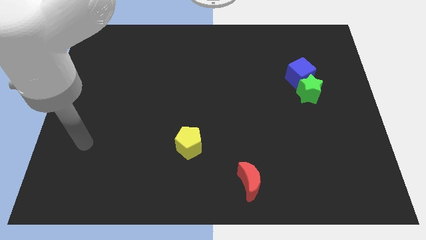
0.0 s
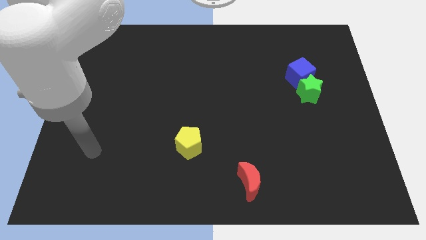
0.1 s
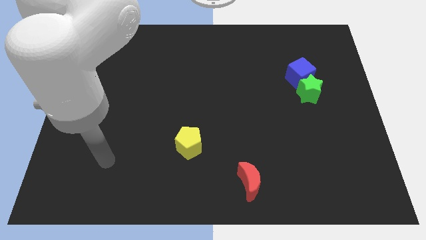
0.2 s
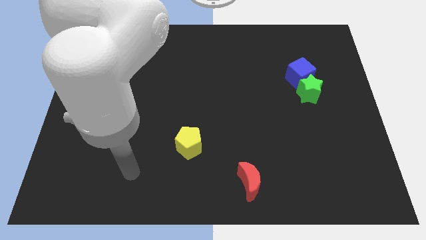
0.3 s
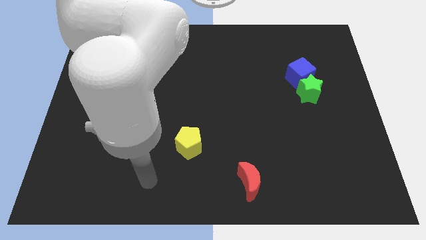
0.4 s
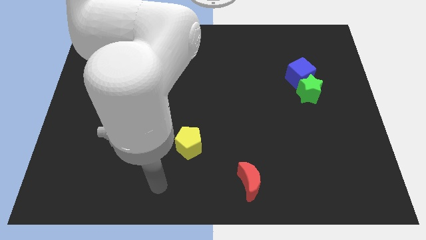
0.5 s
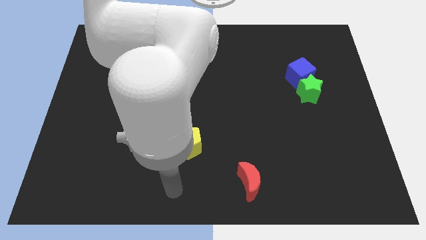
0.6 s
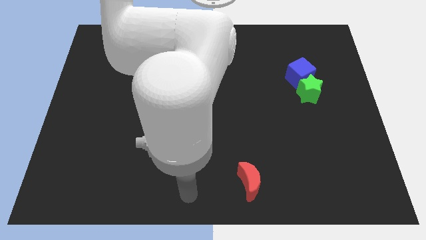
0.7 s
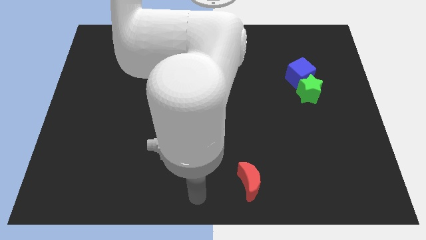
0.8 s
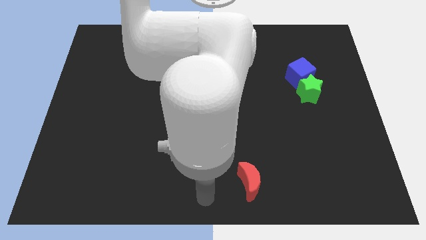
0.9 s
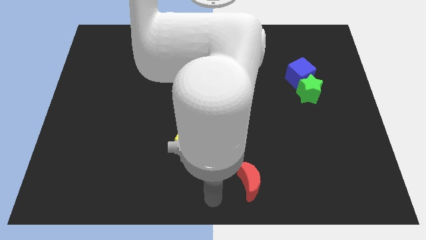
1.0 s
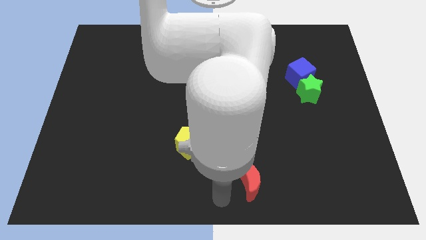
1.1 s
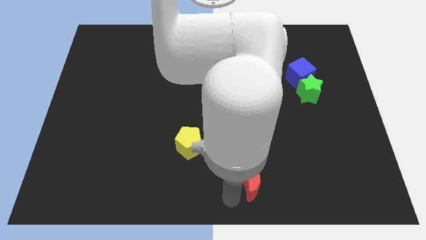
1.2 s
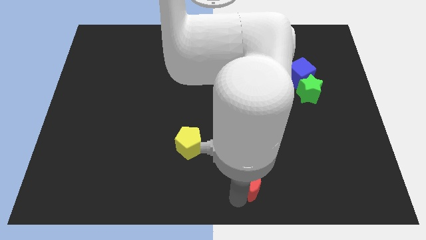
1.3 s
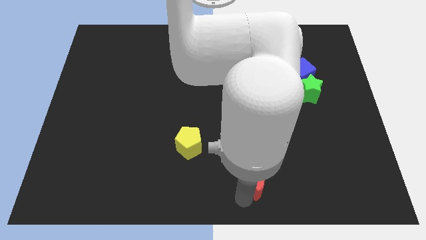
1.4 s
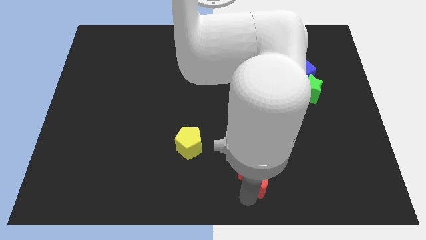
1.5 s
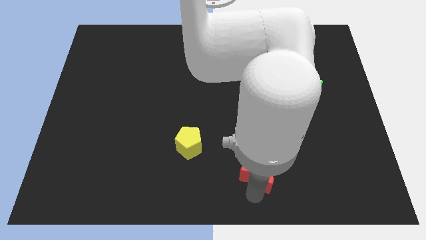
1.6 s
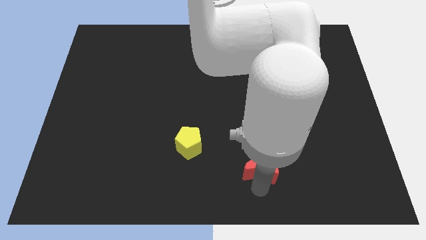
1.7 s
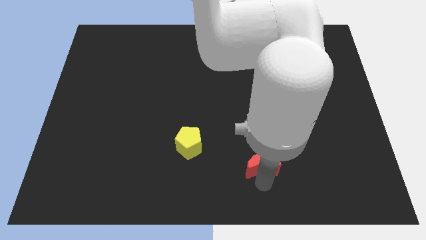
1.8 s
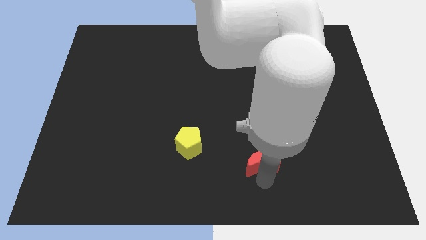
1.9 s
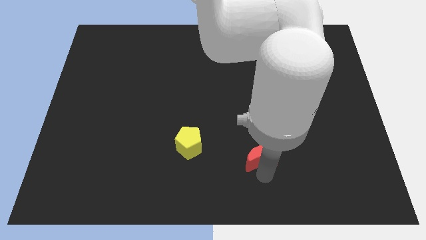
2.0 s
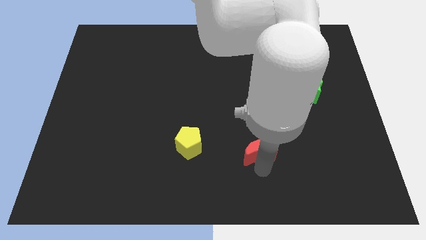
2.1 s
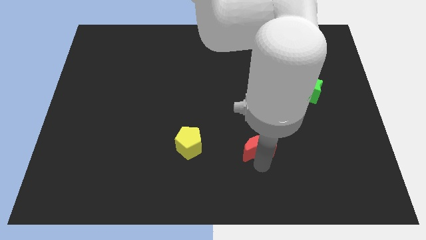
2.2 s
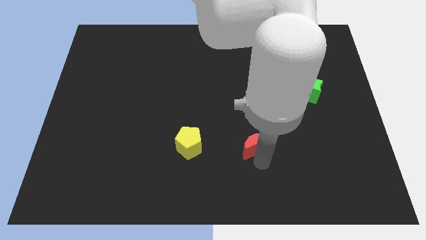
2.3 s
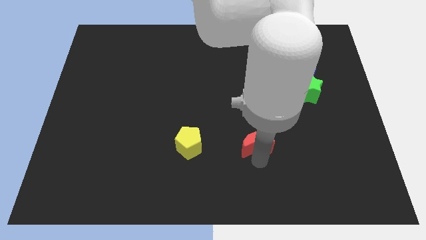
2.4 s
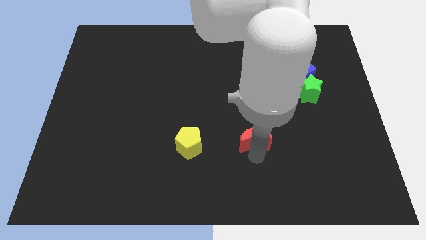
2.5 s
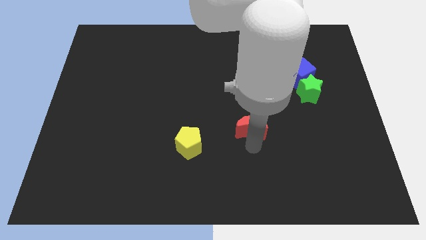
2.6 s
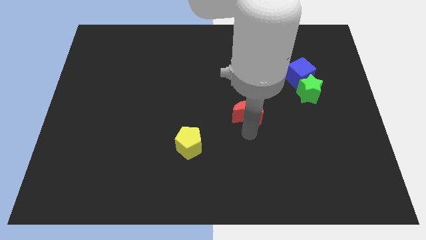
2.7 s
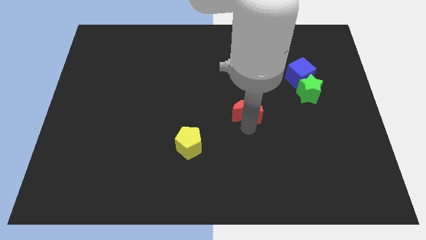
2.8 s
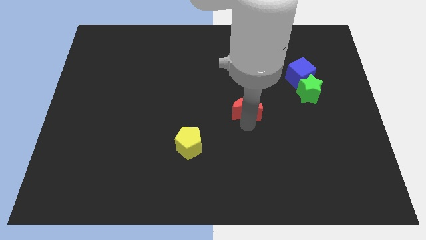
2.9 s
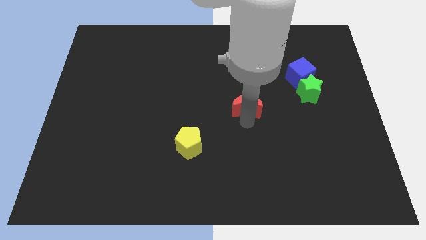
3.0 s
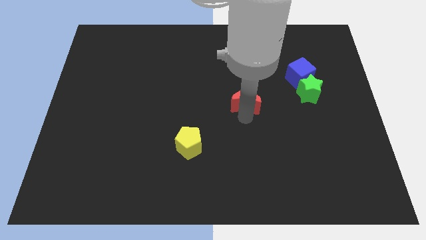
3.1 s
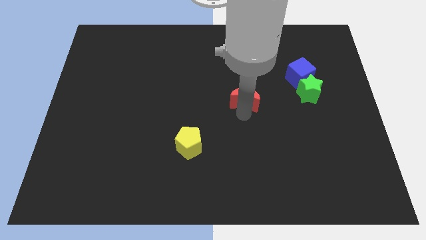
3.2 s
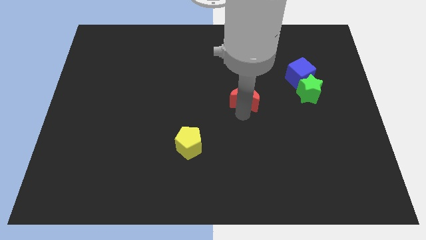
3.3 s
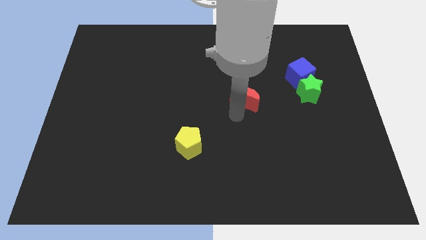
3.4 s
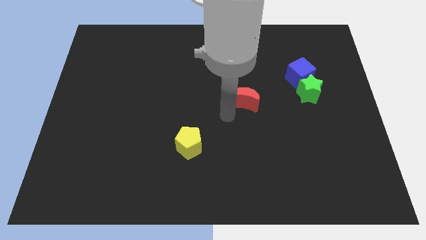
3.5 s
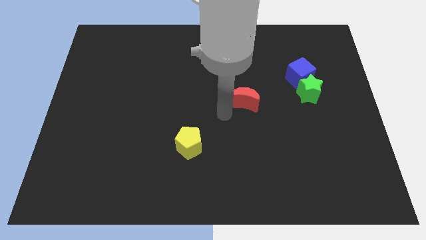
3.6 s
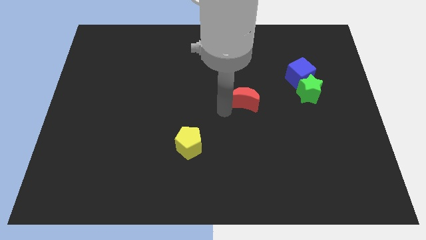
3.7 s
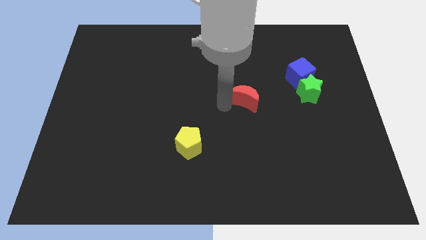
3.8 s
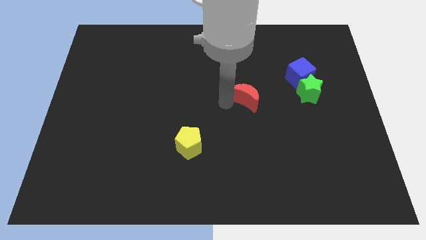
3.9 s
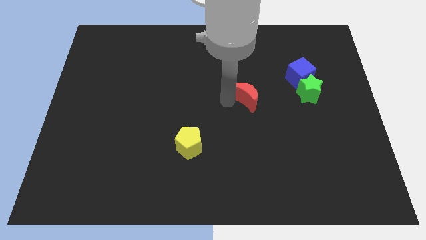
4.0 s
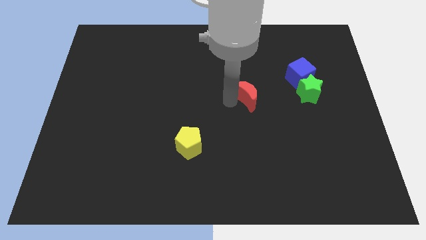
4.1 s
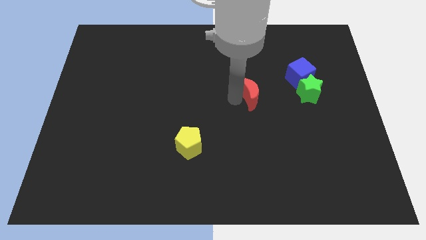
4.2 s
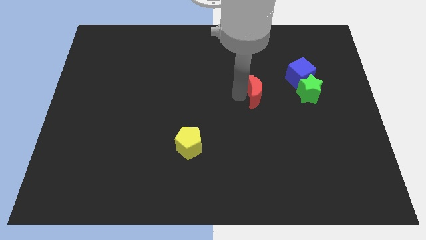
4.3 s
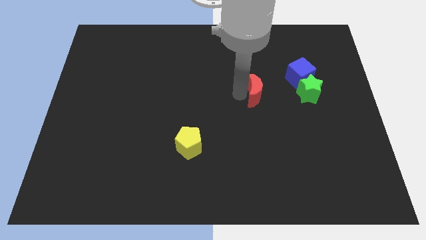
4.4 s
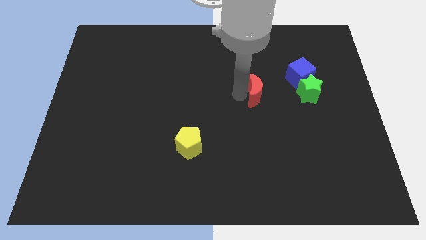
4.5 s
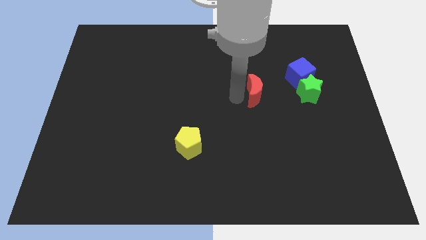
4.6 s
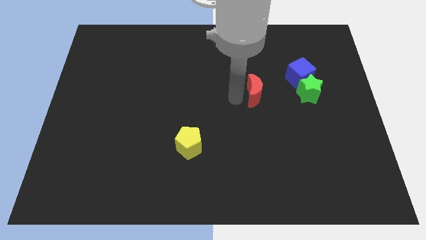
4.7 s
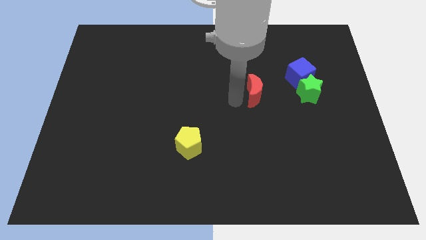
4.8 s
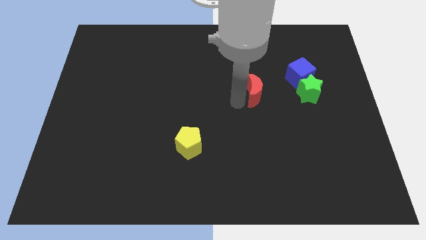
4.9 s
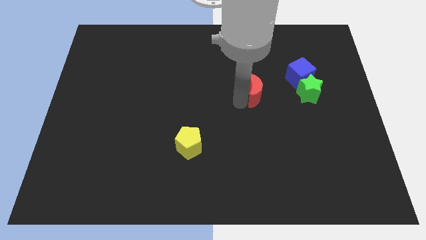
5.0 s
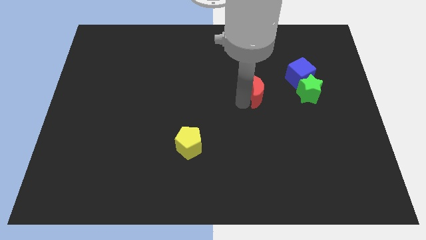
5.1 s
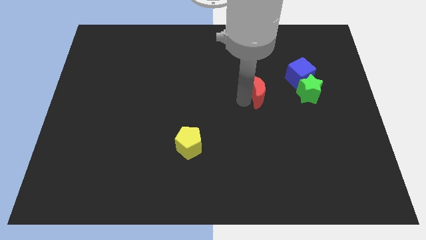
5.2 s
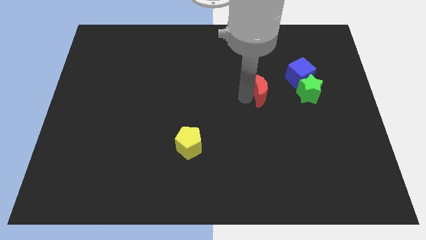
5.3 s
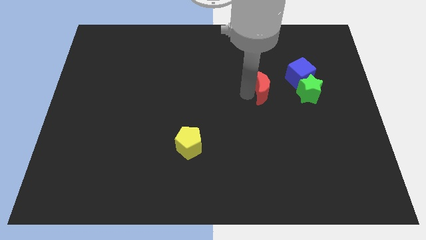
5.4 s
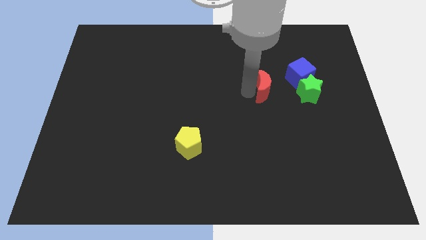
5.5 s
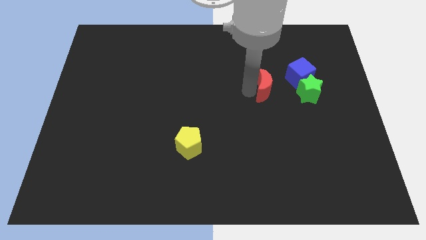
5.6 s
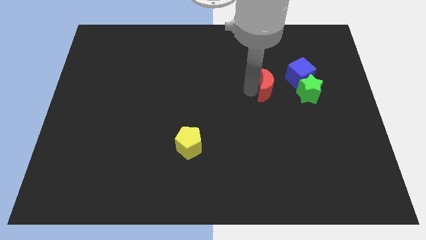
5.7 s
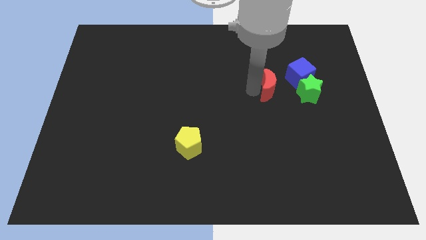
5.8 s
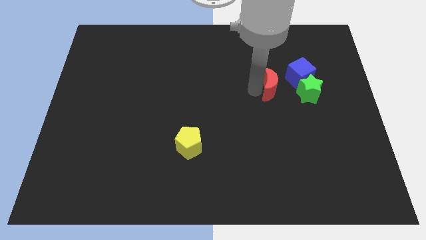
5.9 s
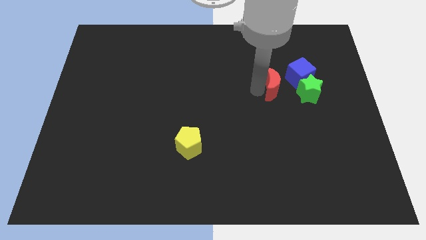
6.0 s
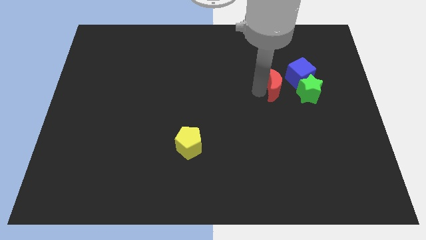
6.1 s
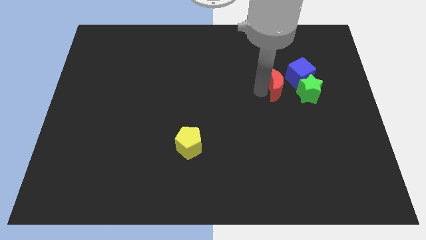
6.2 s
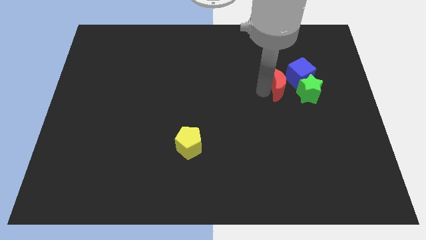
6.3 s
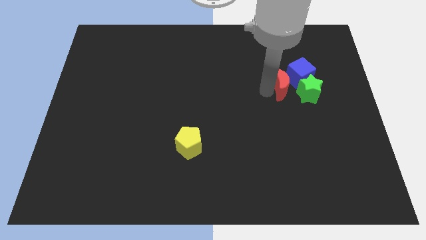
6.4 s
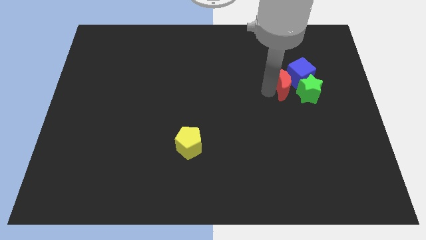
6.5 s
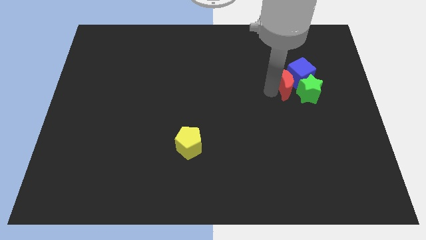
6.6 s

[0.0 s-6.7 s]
slide the moon towards the blue cube

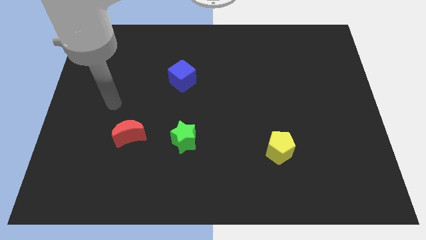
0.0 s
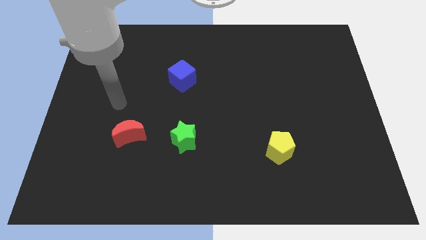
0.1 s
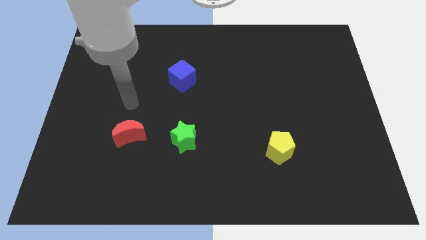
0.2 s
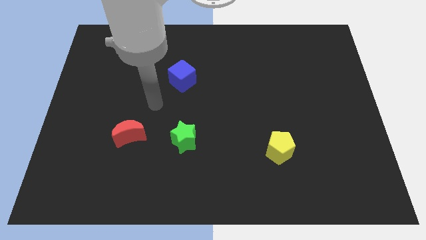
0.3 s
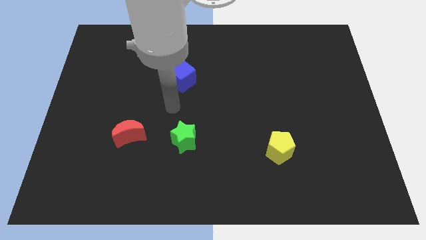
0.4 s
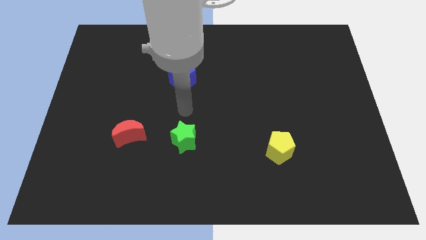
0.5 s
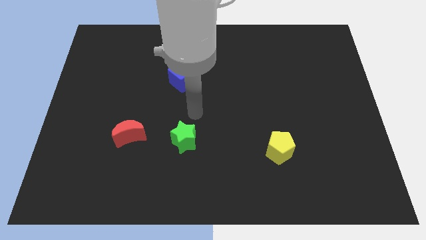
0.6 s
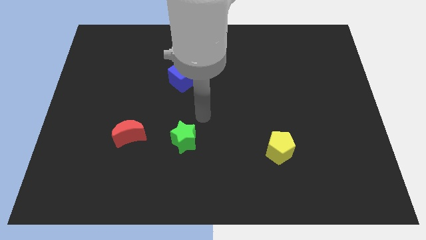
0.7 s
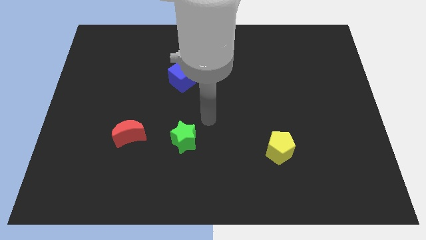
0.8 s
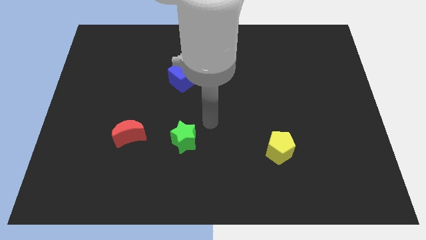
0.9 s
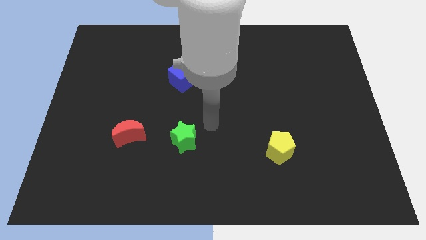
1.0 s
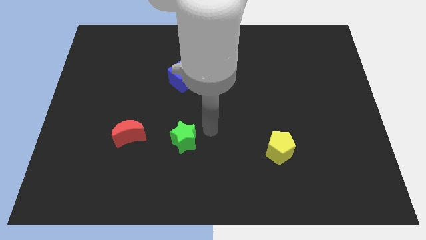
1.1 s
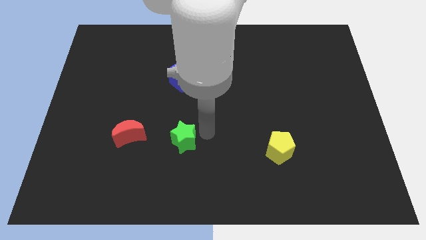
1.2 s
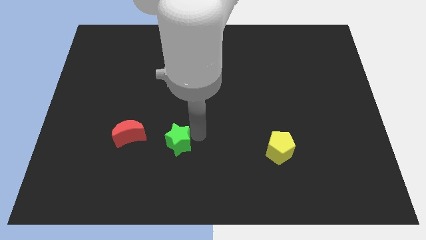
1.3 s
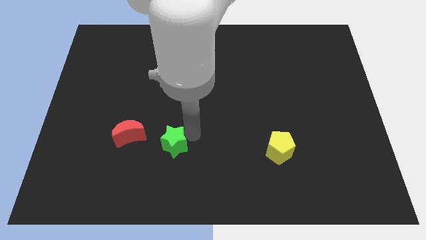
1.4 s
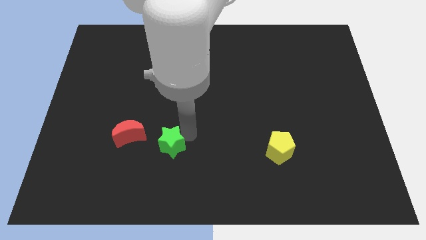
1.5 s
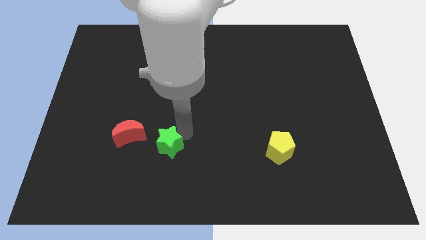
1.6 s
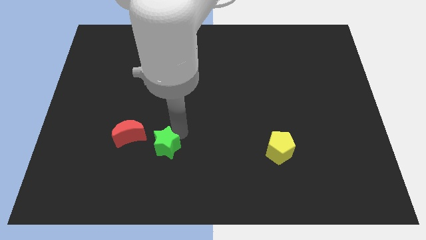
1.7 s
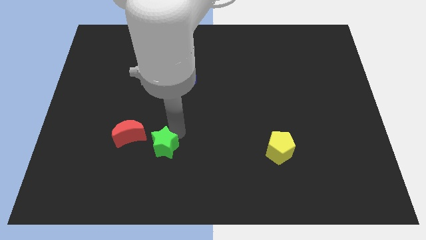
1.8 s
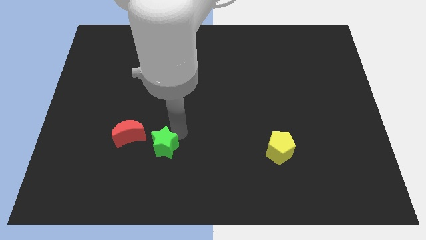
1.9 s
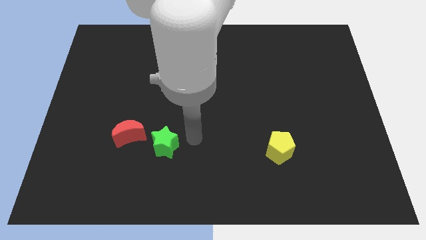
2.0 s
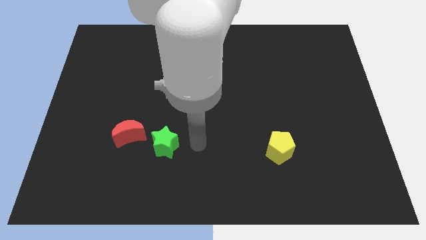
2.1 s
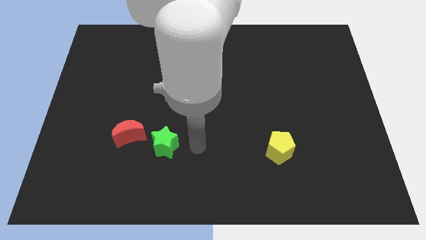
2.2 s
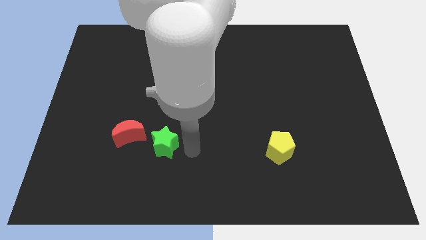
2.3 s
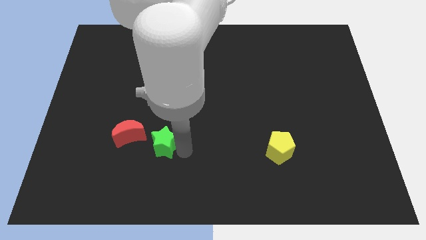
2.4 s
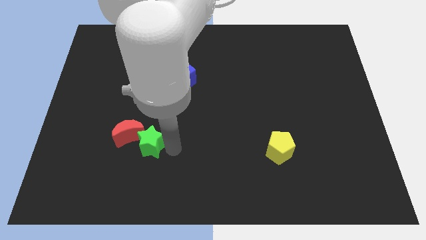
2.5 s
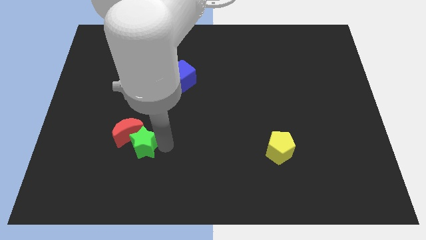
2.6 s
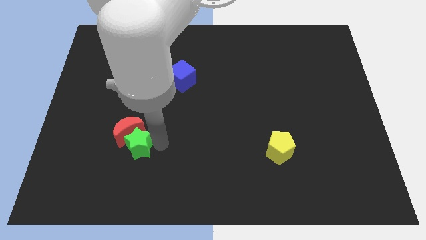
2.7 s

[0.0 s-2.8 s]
slide the star close to the moon
